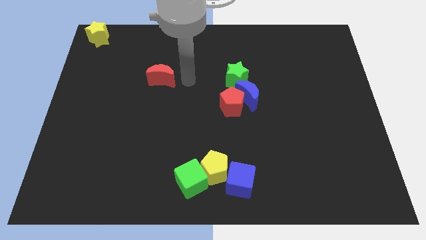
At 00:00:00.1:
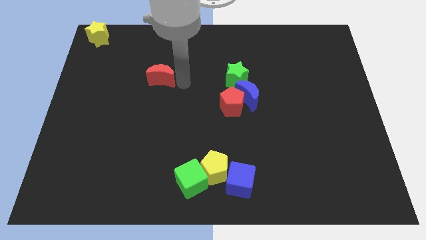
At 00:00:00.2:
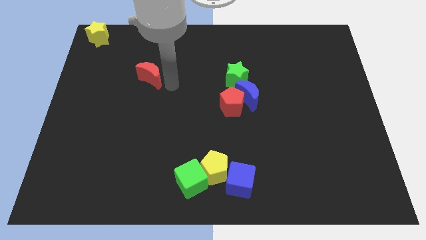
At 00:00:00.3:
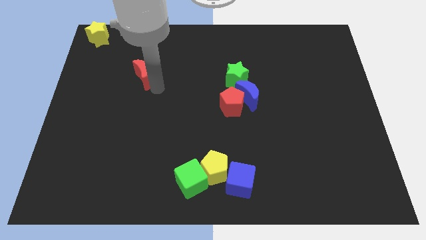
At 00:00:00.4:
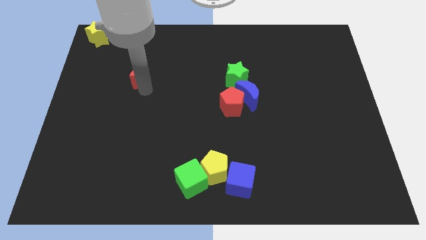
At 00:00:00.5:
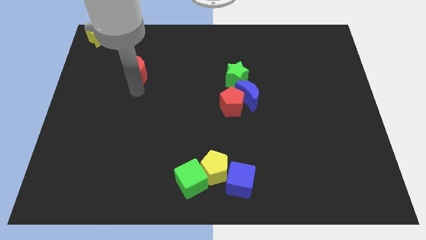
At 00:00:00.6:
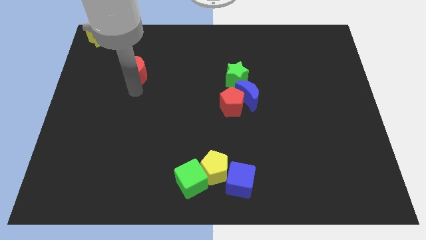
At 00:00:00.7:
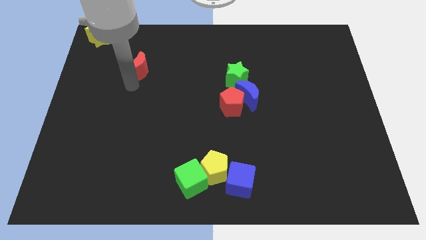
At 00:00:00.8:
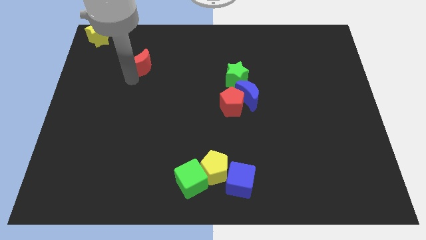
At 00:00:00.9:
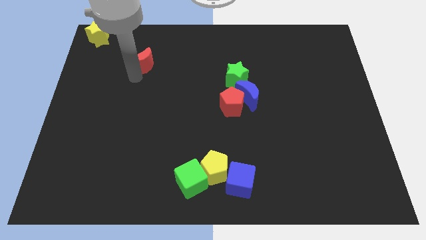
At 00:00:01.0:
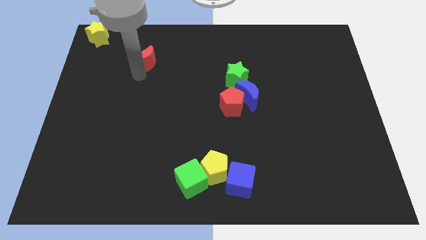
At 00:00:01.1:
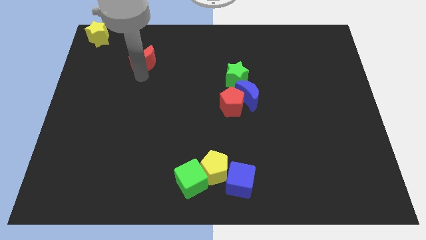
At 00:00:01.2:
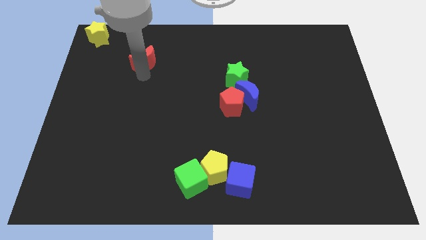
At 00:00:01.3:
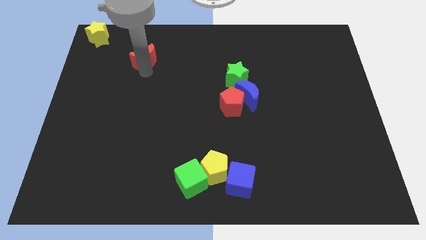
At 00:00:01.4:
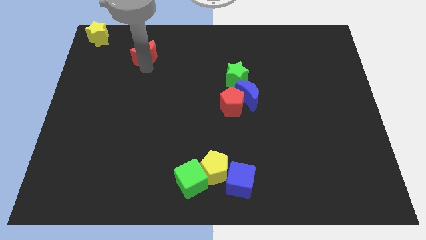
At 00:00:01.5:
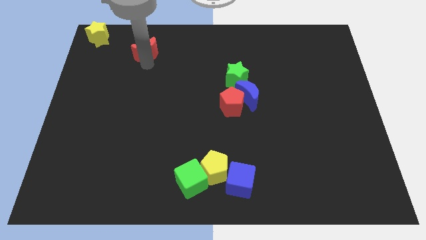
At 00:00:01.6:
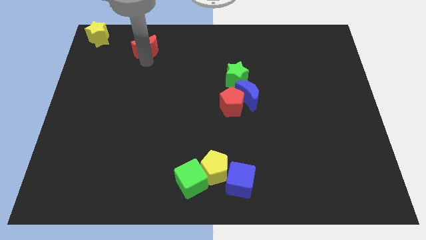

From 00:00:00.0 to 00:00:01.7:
move the red pentagon to the top

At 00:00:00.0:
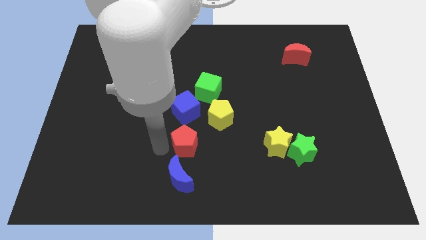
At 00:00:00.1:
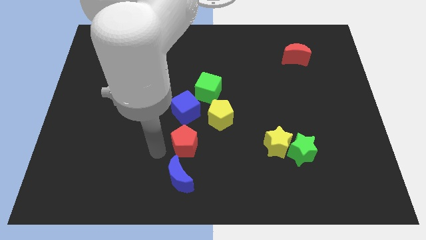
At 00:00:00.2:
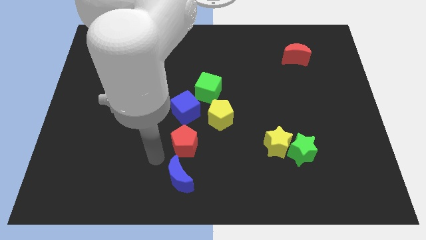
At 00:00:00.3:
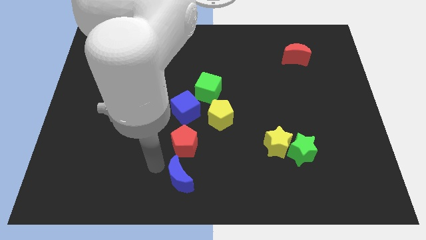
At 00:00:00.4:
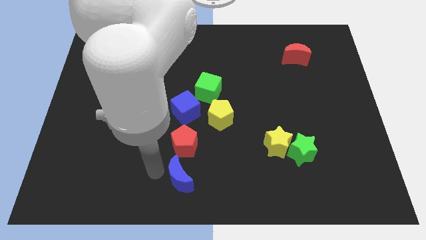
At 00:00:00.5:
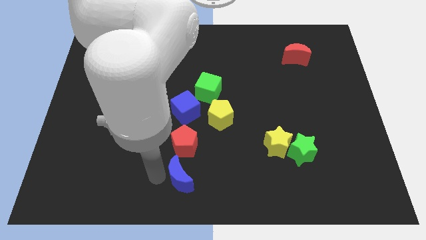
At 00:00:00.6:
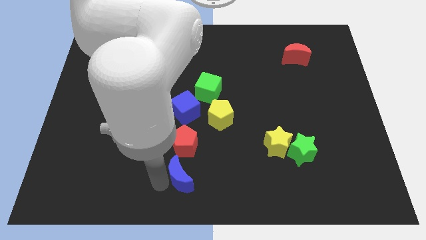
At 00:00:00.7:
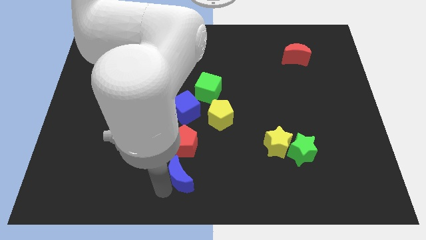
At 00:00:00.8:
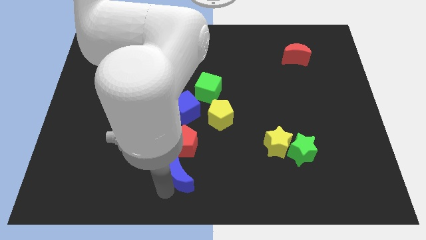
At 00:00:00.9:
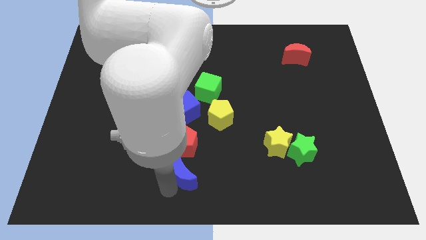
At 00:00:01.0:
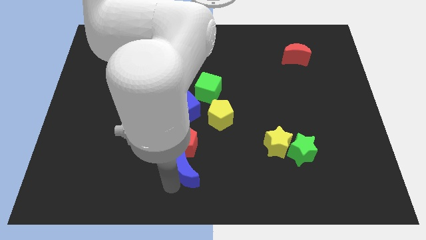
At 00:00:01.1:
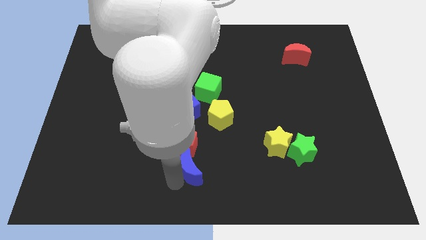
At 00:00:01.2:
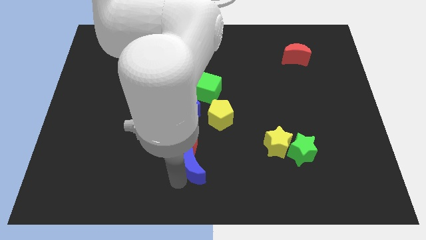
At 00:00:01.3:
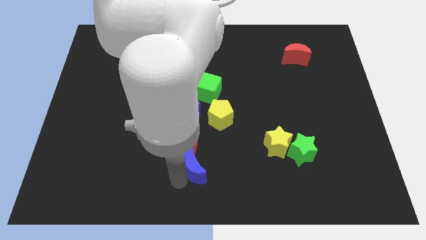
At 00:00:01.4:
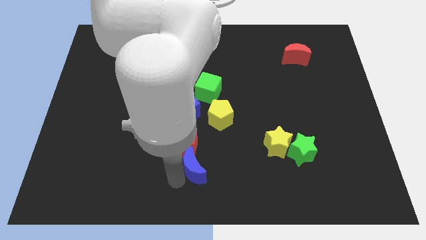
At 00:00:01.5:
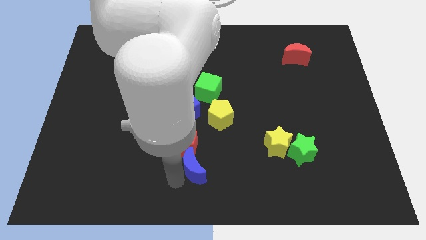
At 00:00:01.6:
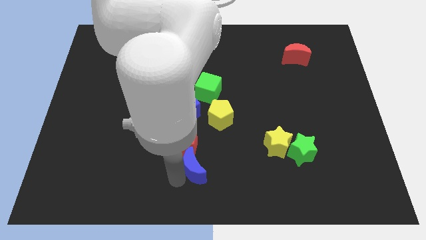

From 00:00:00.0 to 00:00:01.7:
push the blue moon into the red pentagon

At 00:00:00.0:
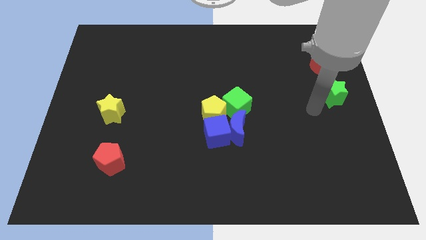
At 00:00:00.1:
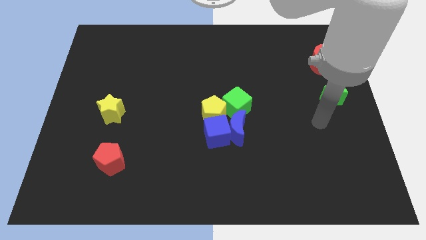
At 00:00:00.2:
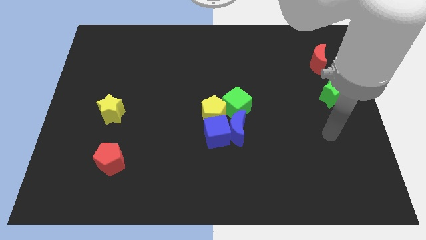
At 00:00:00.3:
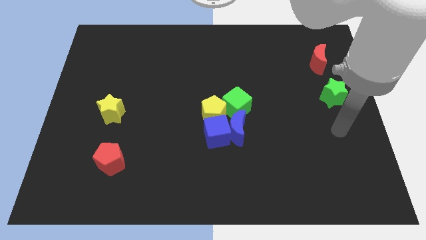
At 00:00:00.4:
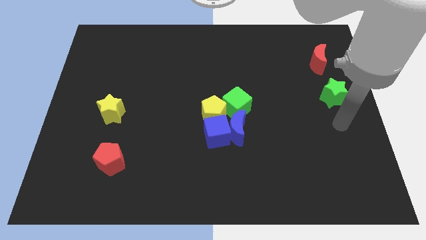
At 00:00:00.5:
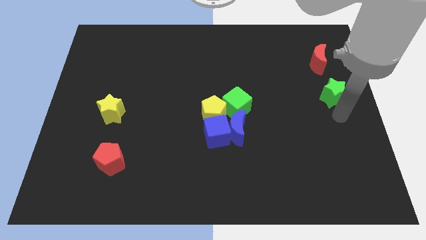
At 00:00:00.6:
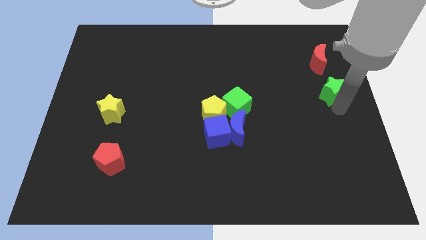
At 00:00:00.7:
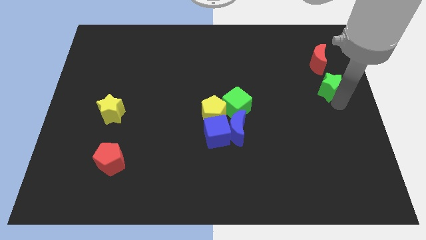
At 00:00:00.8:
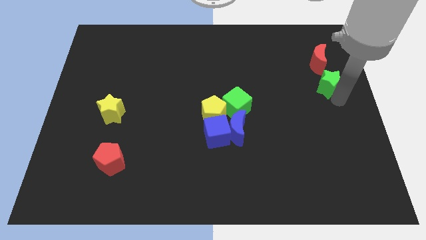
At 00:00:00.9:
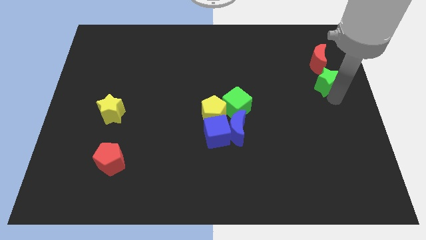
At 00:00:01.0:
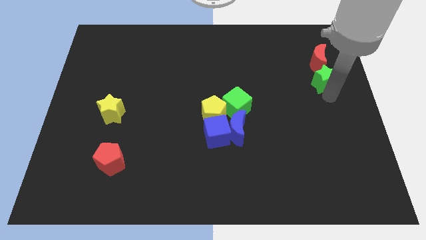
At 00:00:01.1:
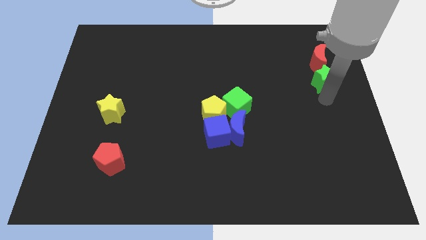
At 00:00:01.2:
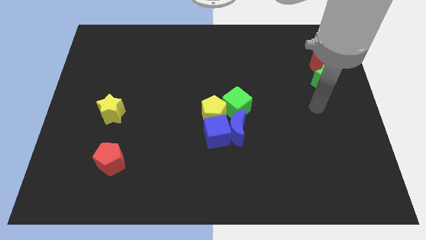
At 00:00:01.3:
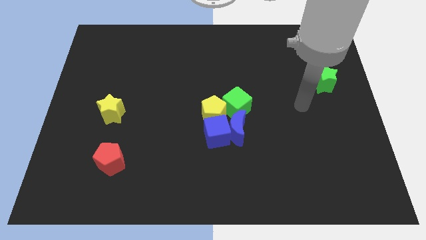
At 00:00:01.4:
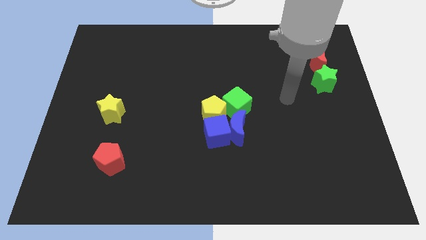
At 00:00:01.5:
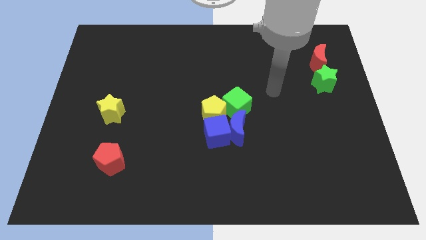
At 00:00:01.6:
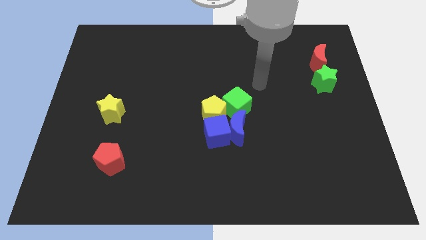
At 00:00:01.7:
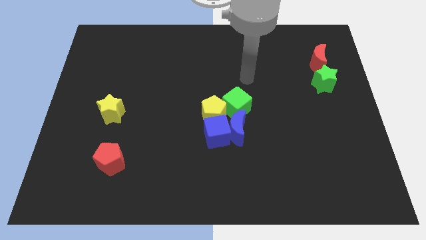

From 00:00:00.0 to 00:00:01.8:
push the green star into the red moon

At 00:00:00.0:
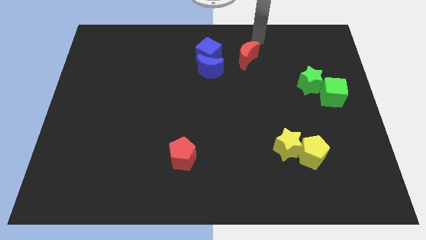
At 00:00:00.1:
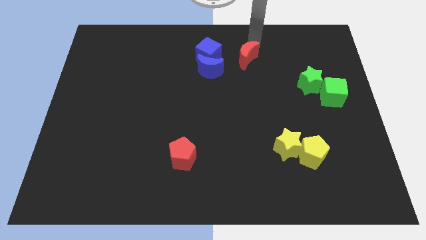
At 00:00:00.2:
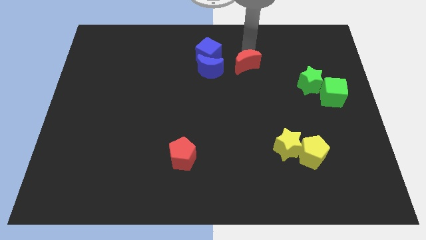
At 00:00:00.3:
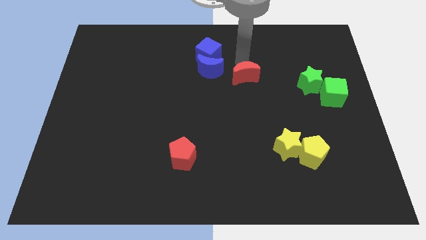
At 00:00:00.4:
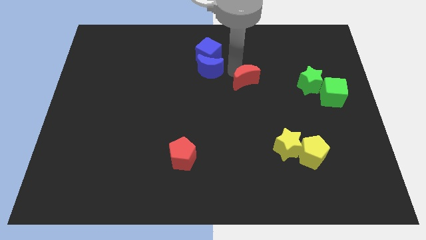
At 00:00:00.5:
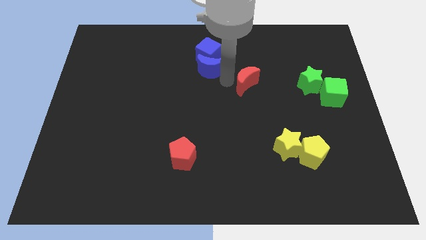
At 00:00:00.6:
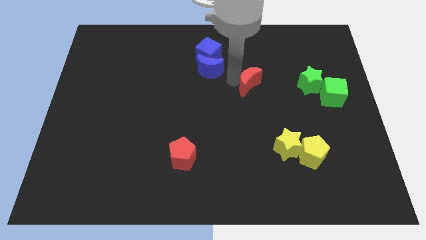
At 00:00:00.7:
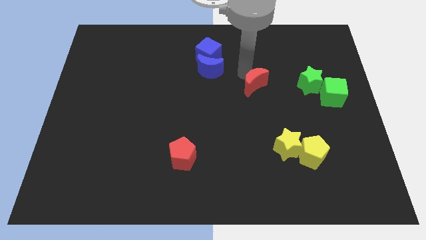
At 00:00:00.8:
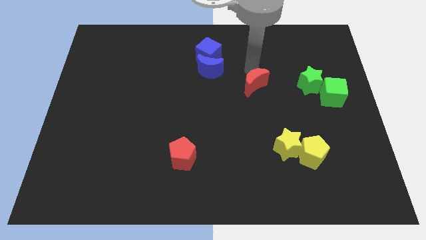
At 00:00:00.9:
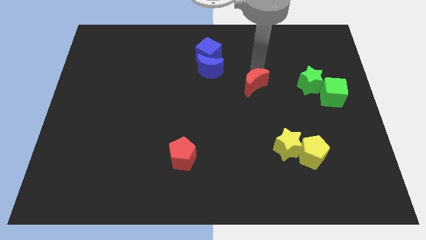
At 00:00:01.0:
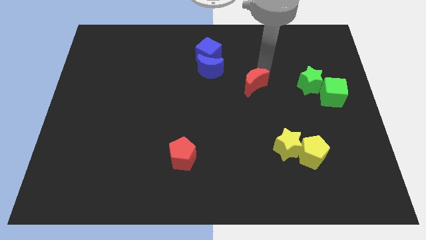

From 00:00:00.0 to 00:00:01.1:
place the red crescent in between the group of blue and green blocks

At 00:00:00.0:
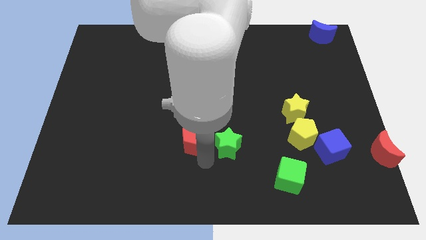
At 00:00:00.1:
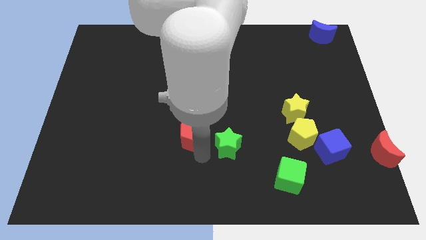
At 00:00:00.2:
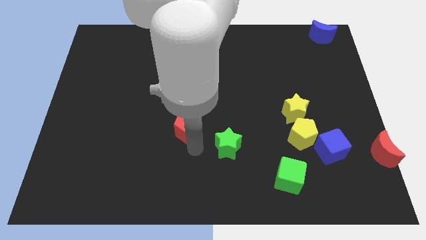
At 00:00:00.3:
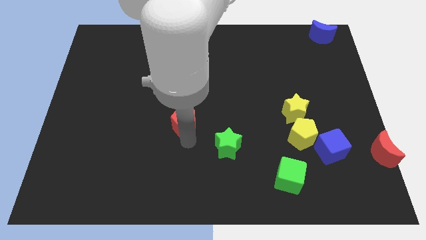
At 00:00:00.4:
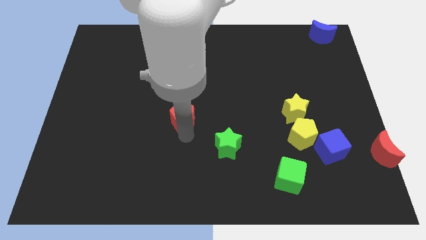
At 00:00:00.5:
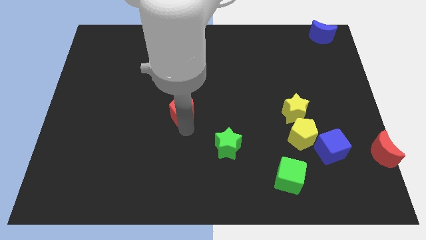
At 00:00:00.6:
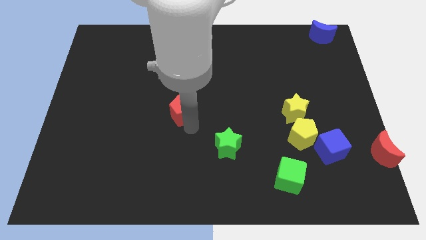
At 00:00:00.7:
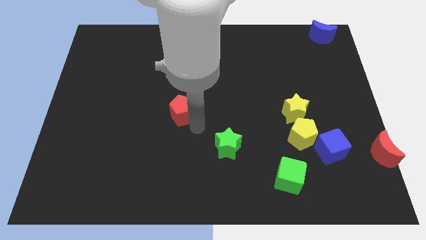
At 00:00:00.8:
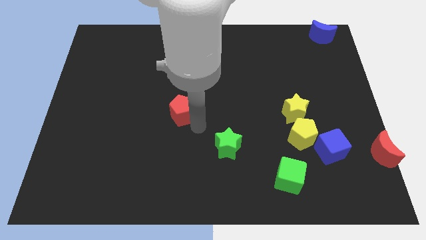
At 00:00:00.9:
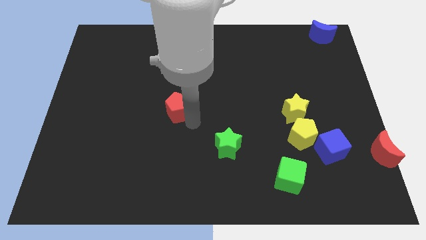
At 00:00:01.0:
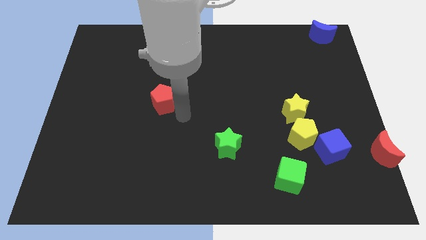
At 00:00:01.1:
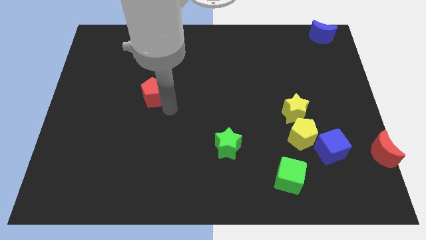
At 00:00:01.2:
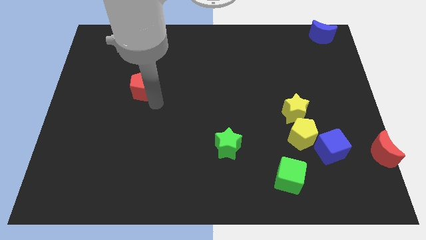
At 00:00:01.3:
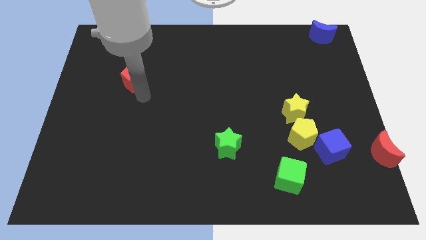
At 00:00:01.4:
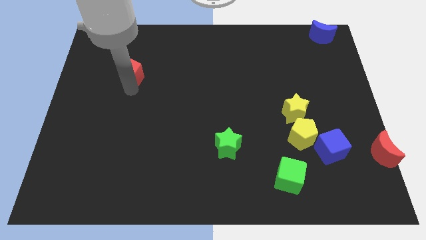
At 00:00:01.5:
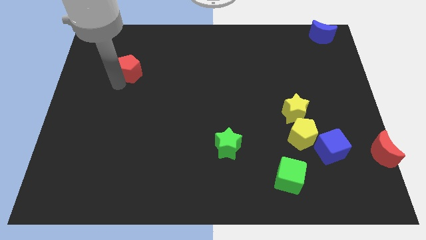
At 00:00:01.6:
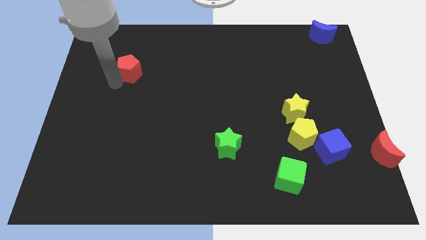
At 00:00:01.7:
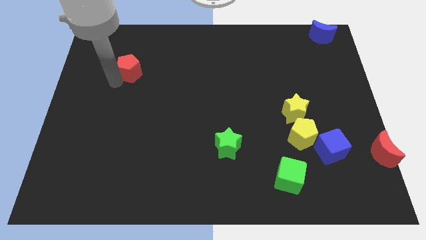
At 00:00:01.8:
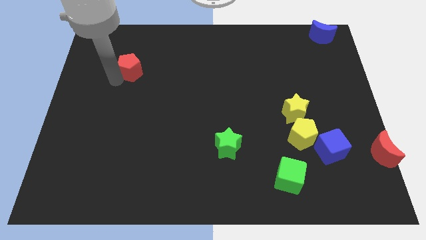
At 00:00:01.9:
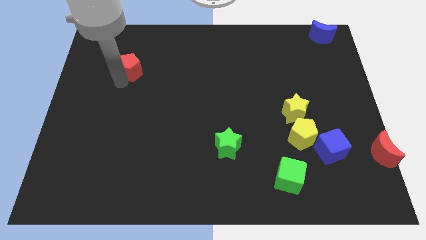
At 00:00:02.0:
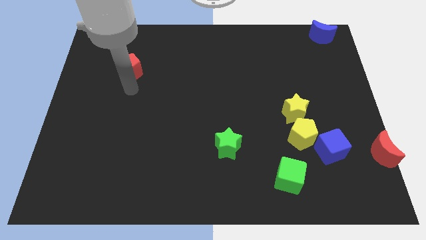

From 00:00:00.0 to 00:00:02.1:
slide the red pentagon away from the green star

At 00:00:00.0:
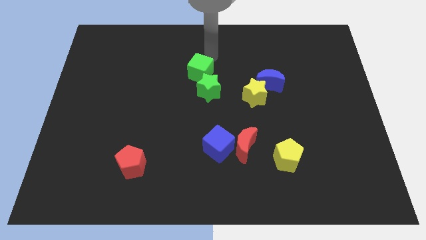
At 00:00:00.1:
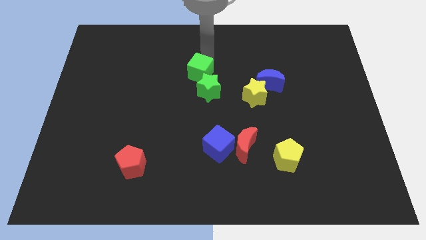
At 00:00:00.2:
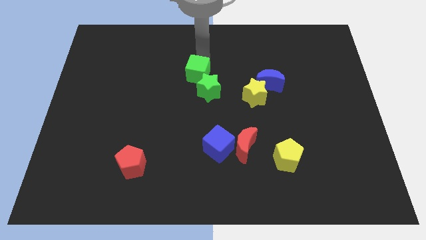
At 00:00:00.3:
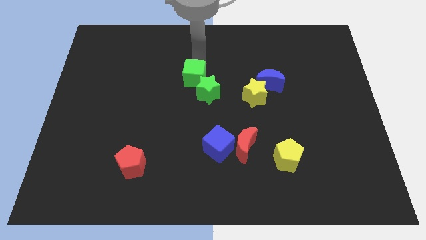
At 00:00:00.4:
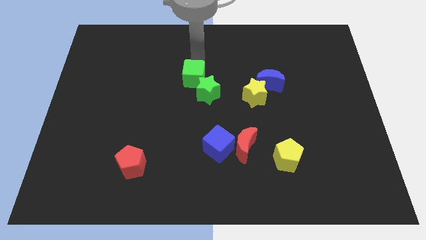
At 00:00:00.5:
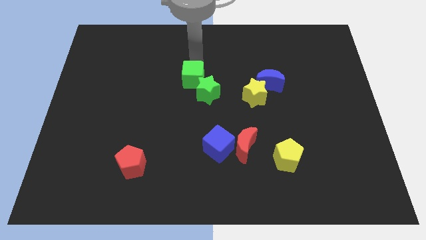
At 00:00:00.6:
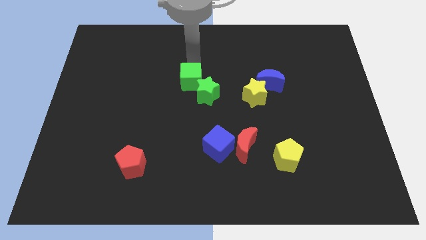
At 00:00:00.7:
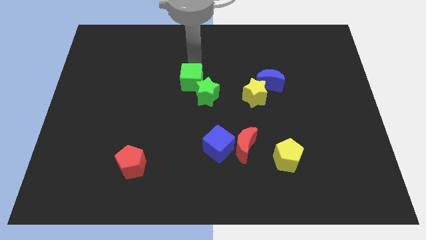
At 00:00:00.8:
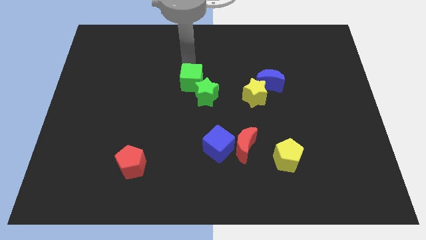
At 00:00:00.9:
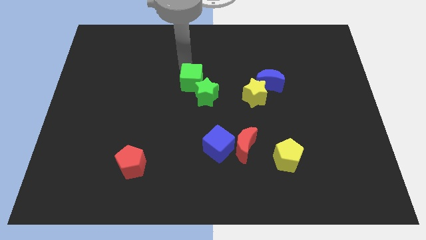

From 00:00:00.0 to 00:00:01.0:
move green cube in to green star
